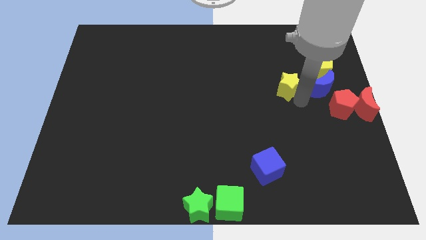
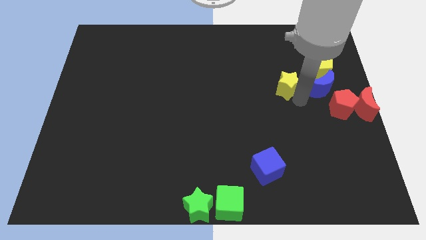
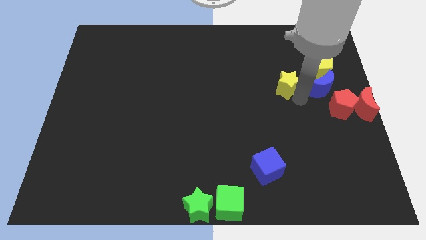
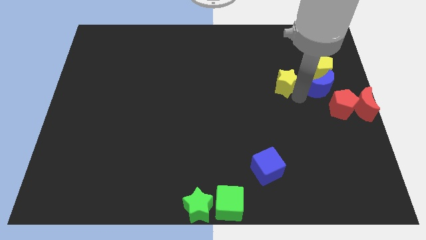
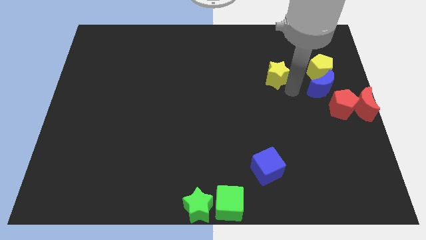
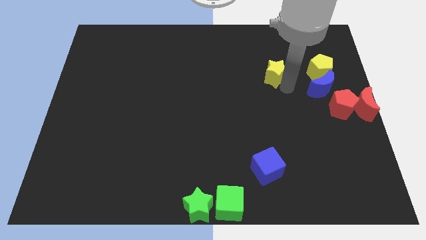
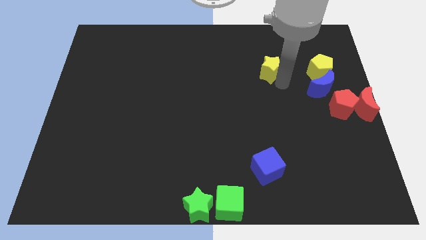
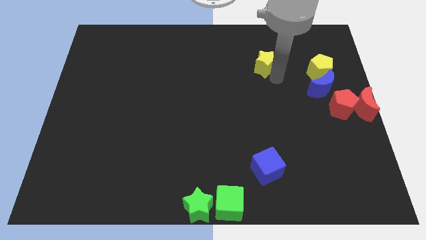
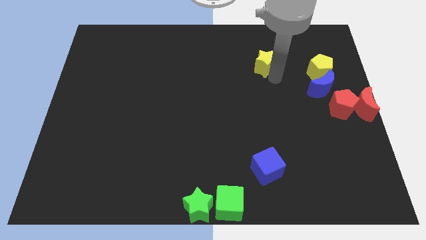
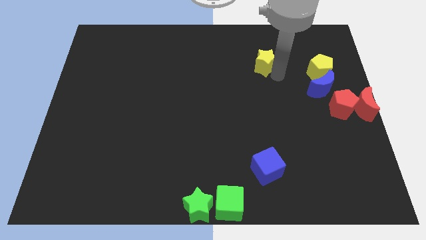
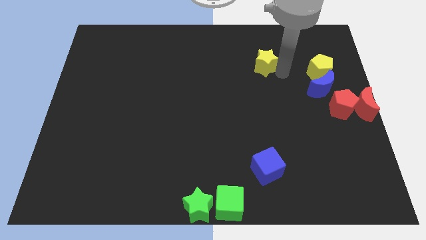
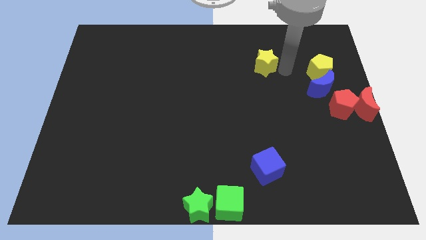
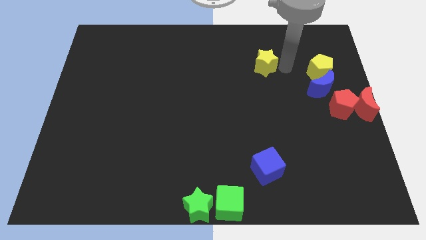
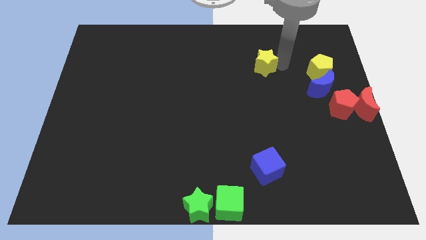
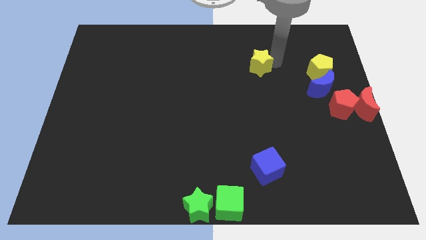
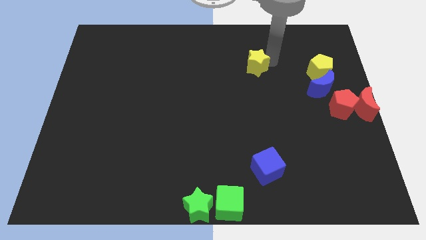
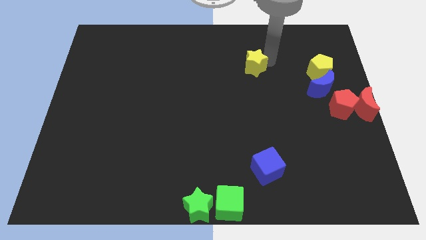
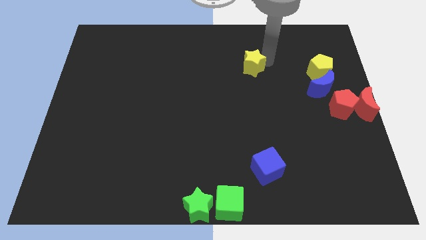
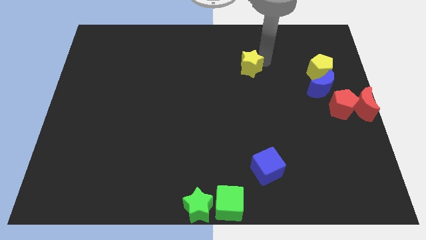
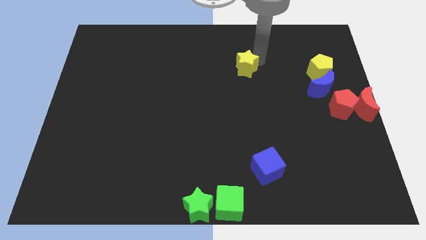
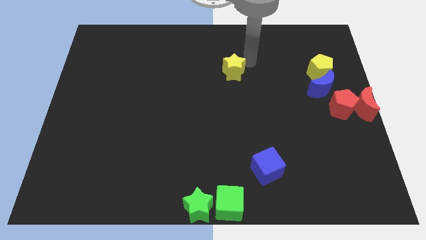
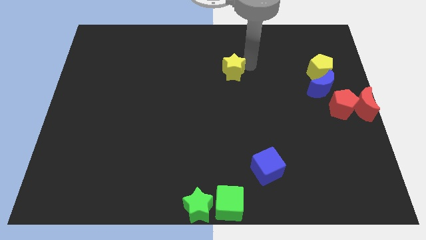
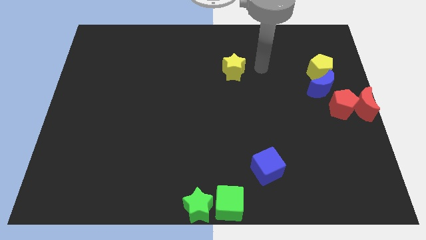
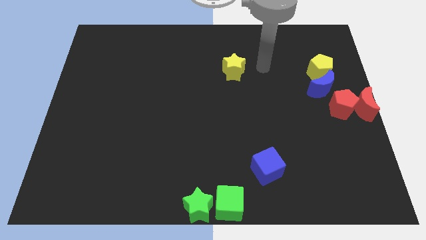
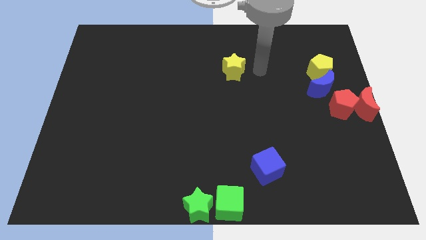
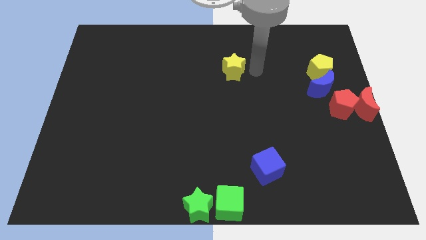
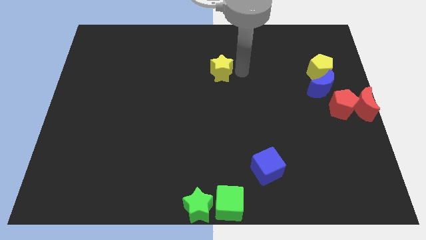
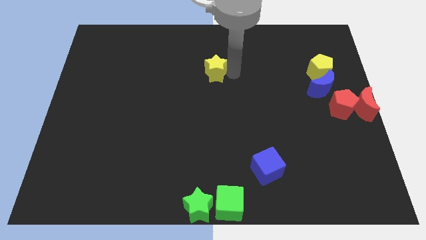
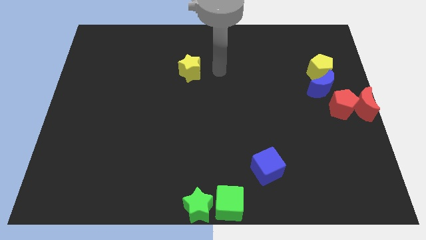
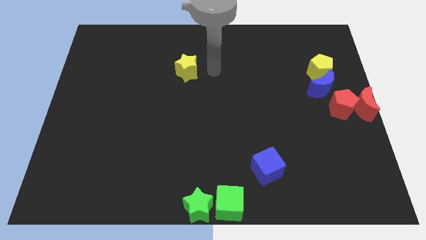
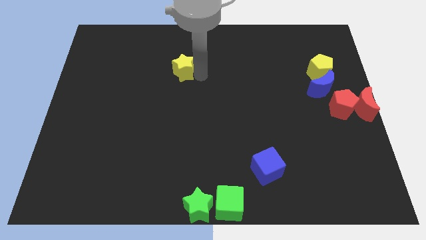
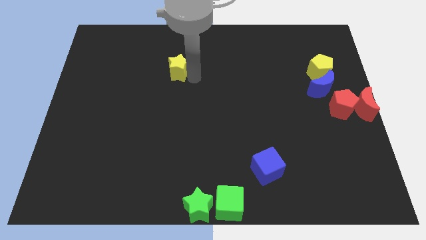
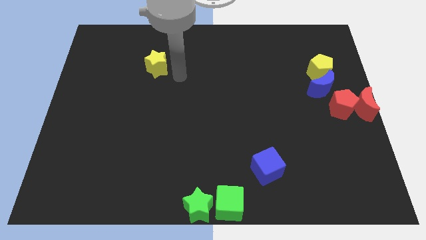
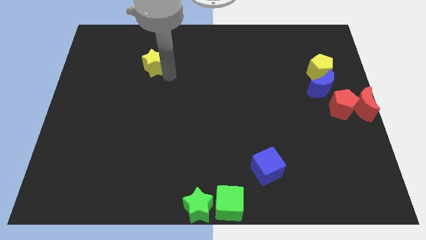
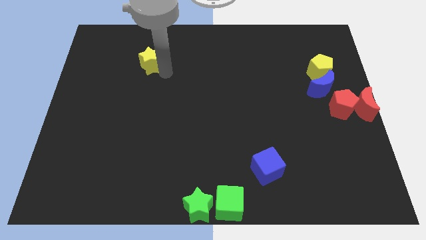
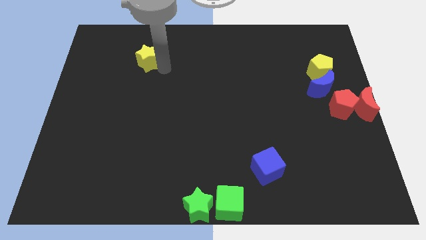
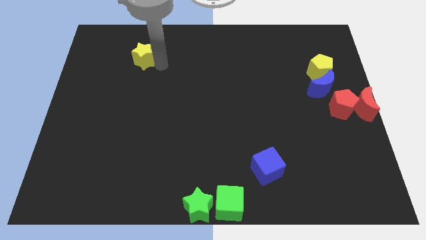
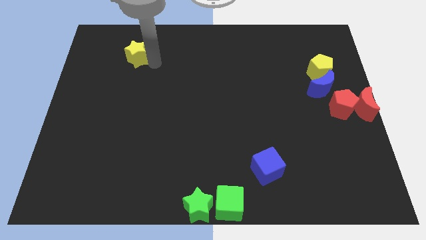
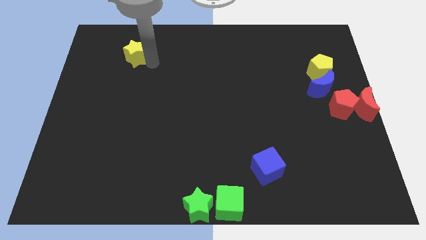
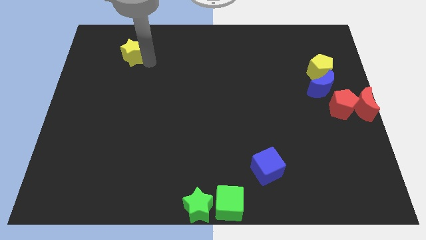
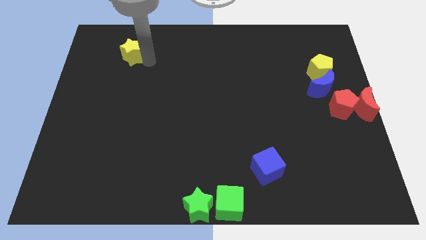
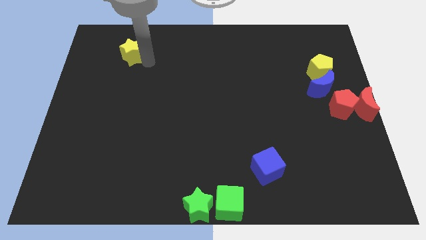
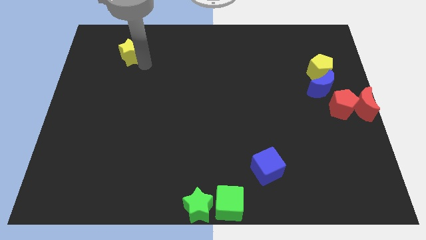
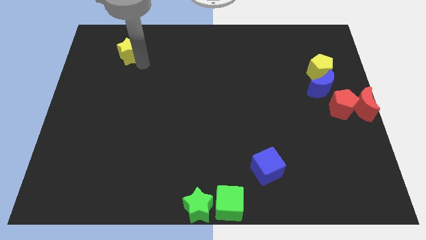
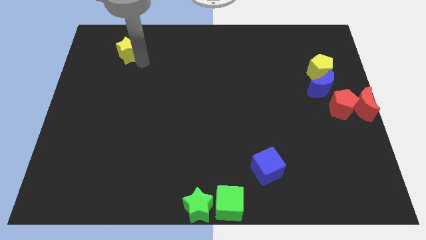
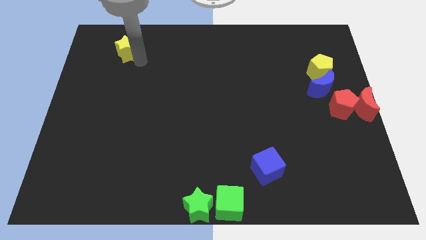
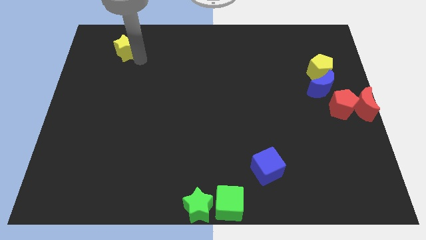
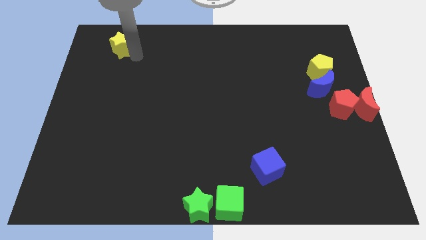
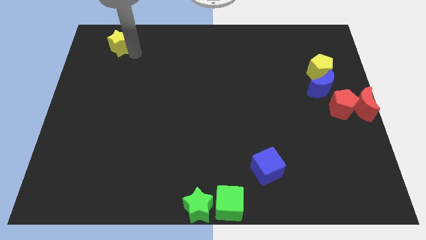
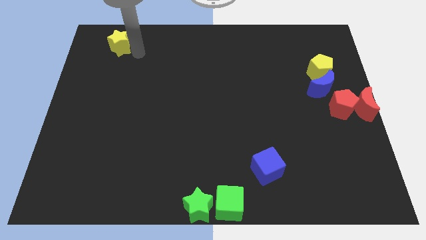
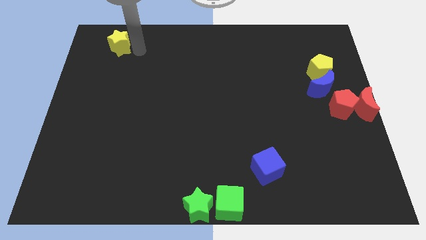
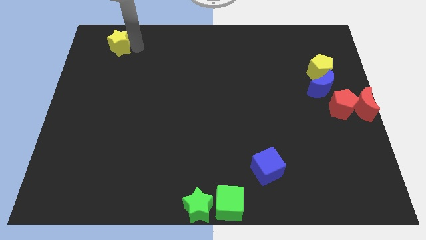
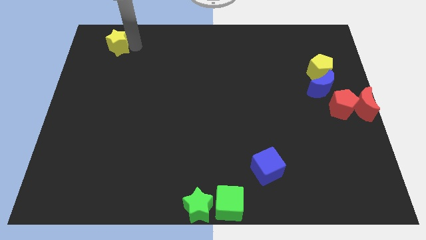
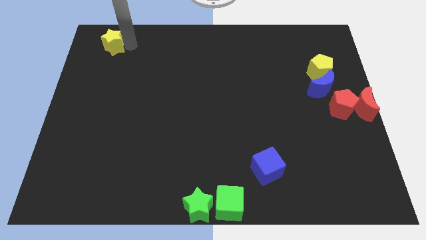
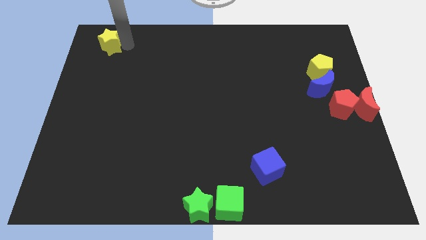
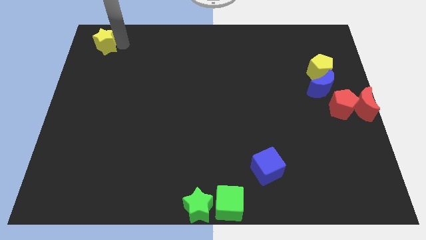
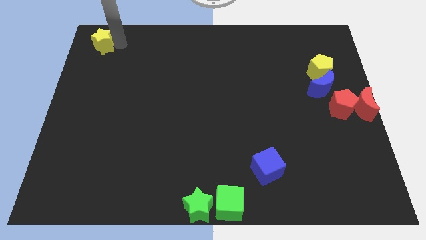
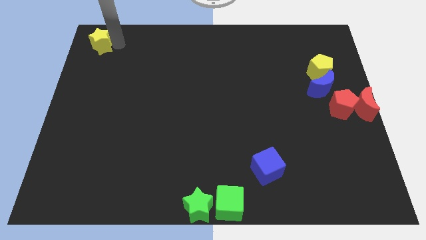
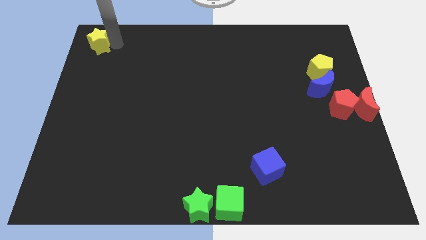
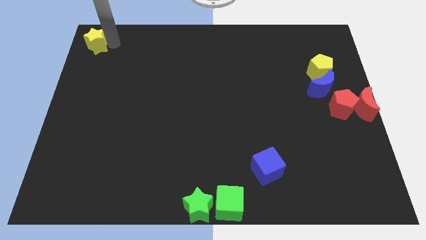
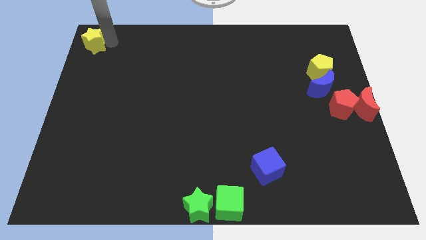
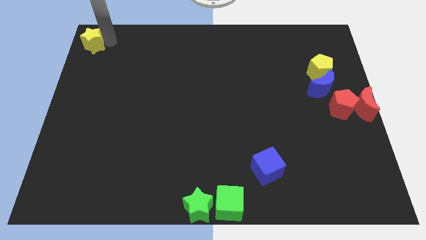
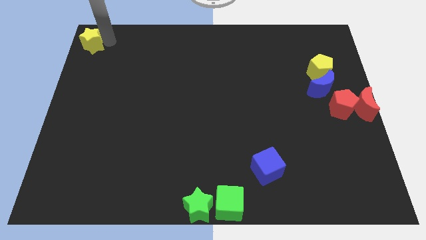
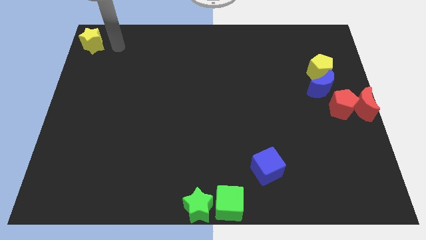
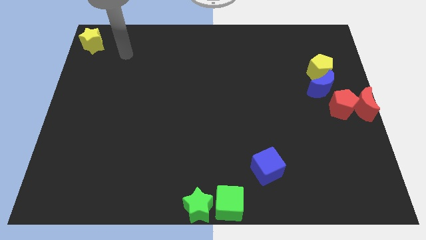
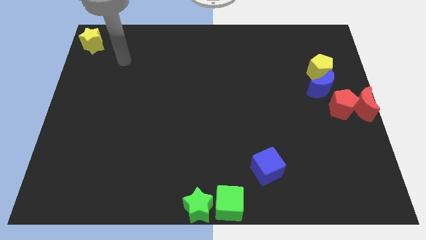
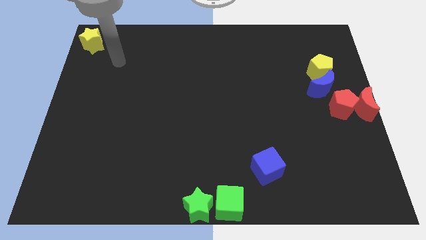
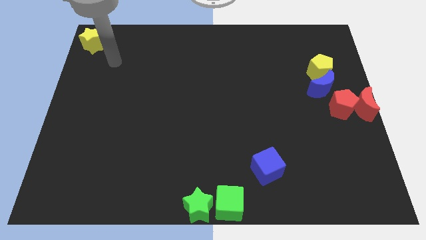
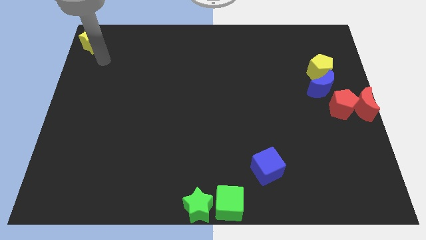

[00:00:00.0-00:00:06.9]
move yellow star to the top left corner of the board

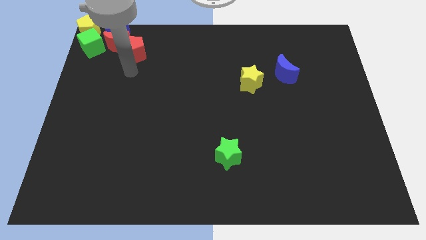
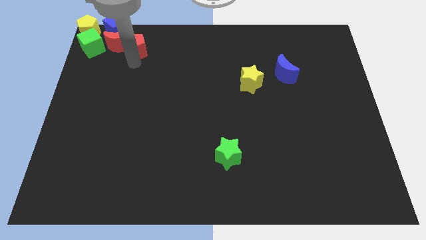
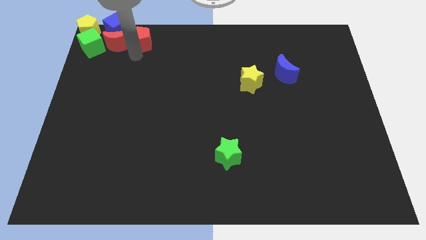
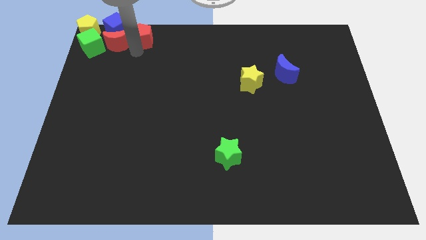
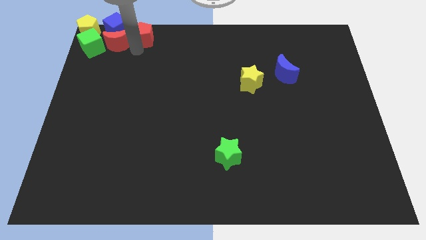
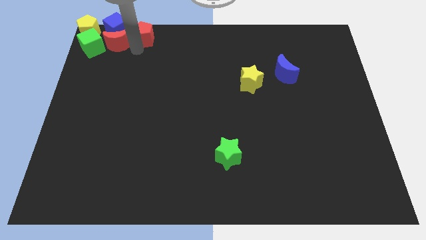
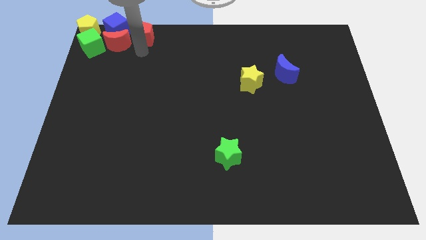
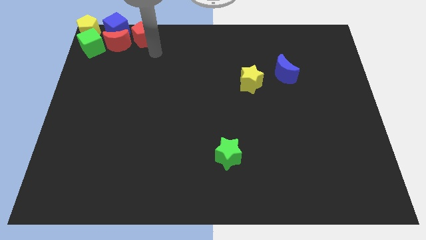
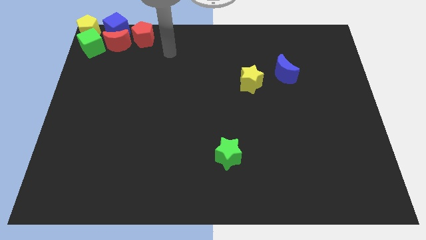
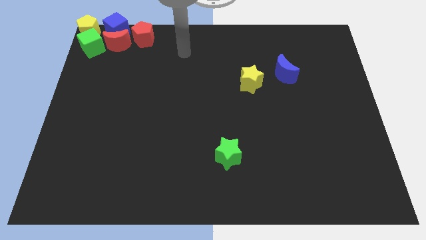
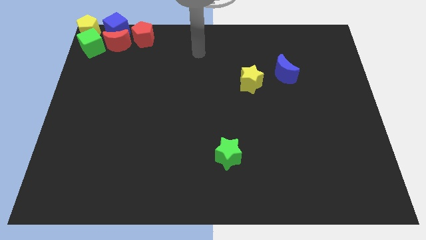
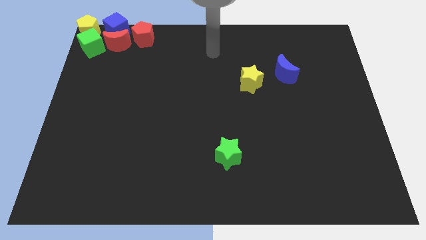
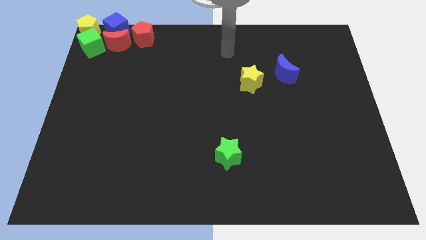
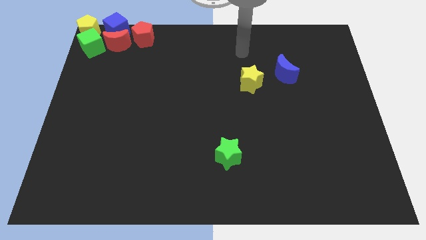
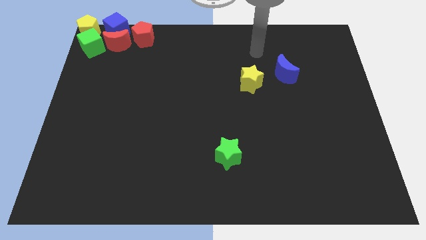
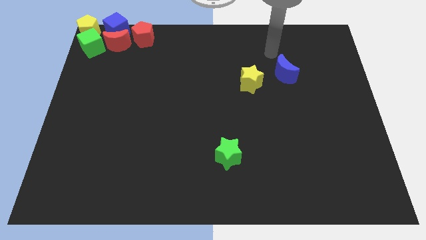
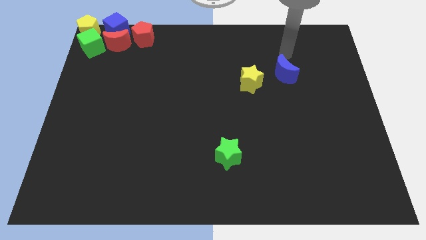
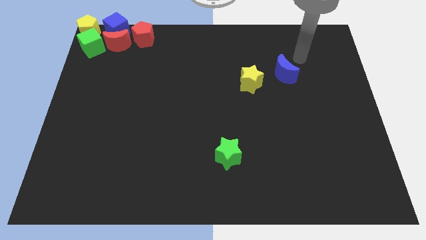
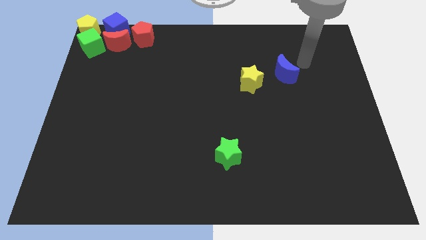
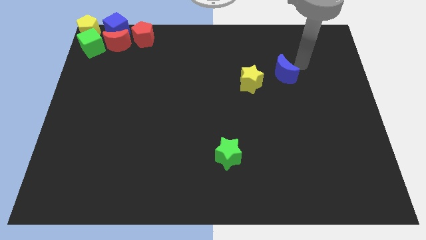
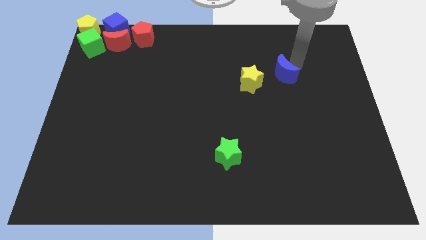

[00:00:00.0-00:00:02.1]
move arm near the blue moon
